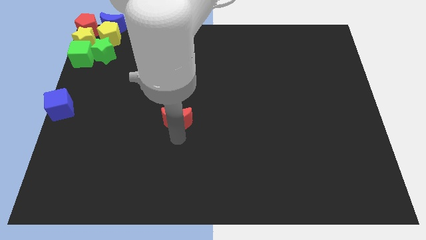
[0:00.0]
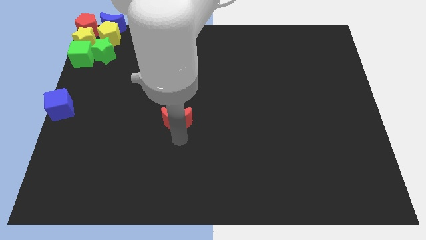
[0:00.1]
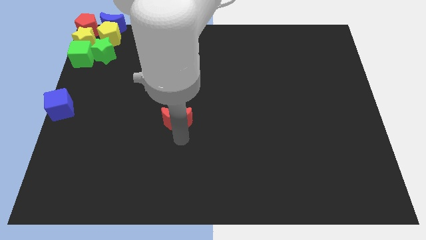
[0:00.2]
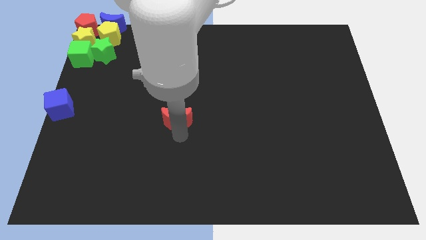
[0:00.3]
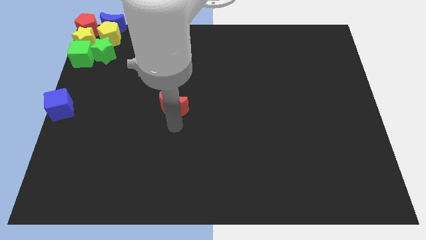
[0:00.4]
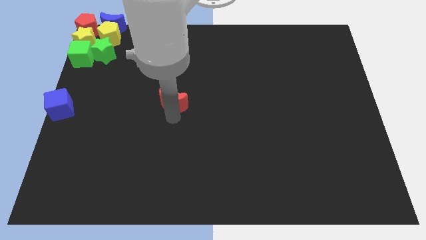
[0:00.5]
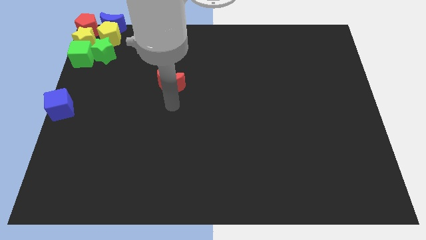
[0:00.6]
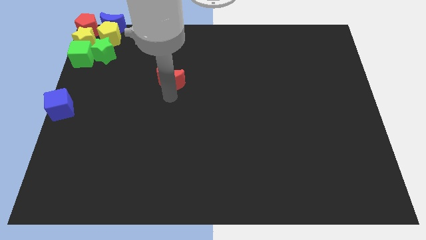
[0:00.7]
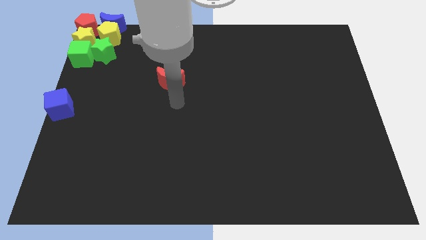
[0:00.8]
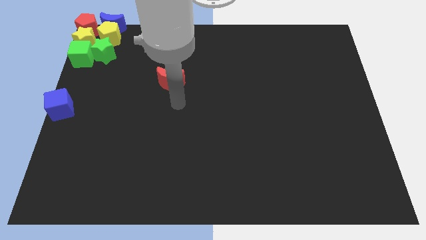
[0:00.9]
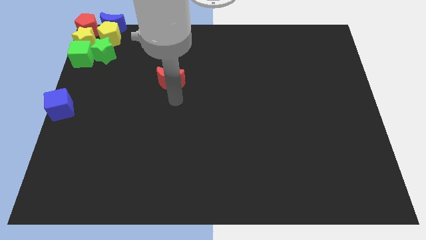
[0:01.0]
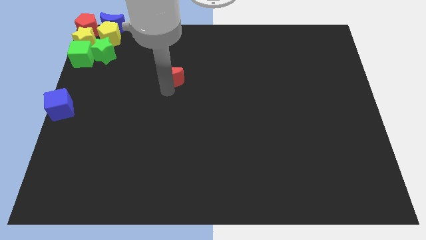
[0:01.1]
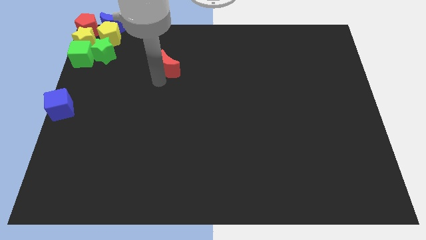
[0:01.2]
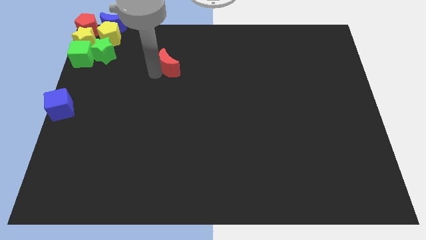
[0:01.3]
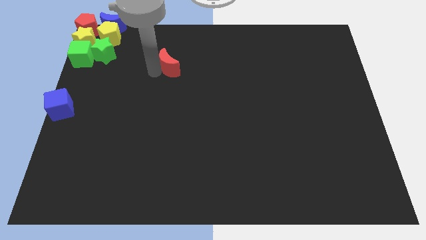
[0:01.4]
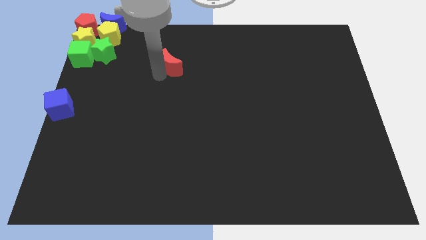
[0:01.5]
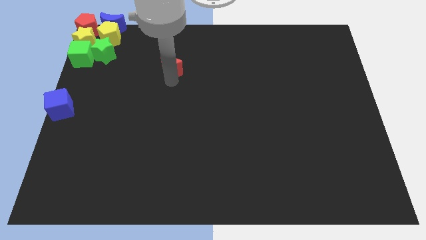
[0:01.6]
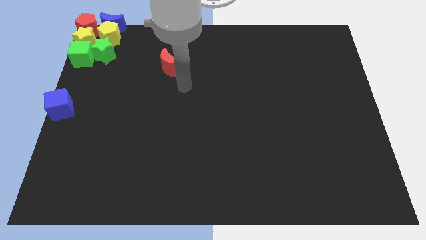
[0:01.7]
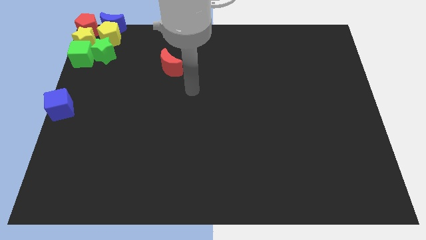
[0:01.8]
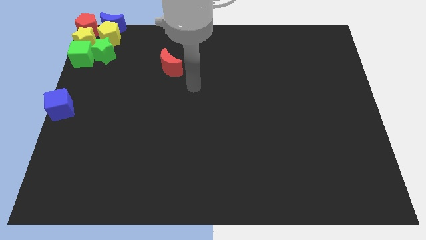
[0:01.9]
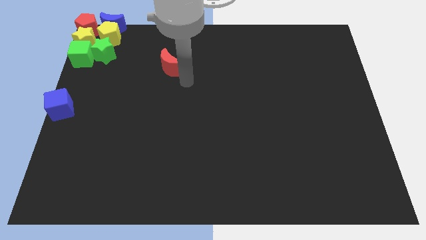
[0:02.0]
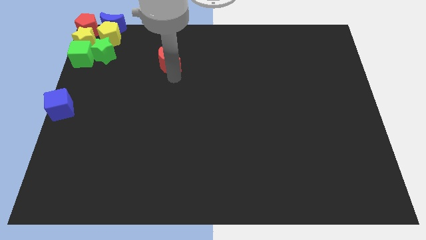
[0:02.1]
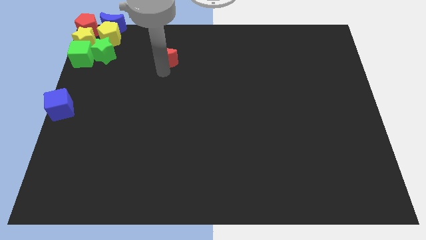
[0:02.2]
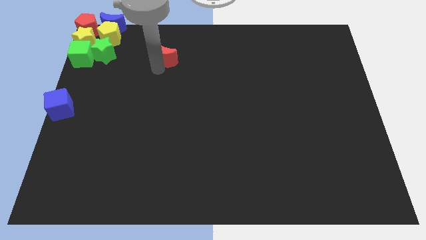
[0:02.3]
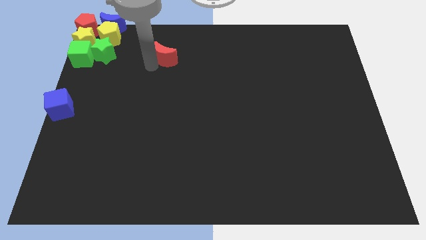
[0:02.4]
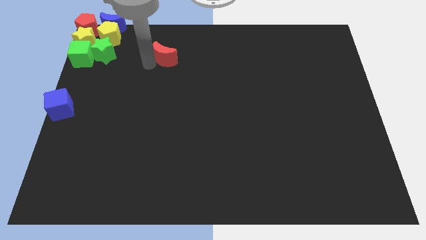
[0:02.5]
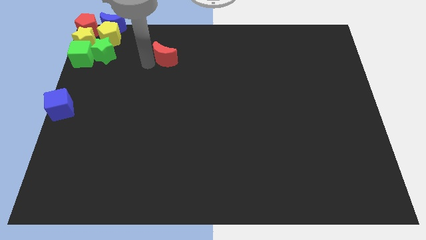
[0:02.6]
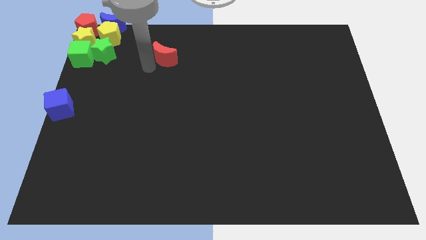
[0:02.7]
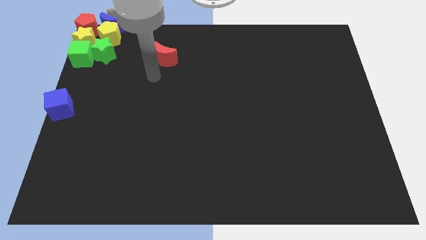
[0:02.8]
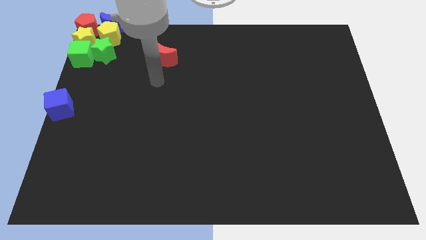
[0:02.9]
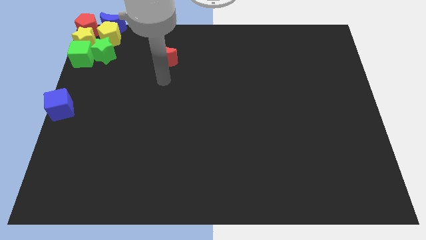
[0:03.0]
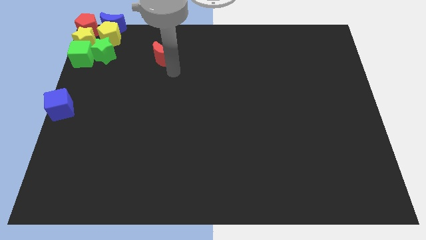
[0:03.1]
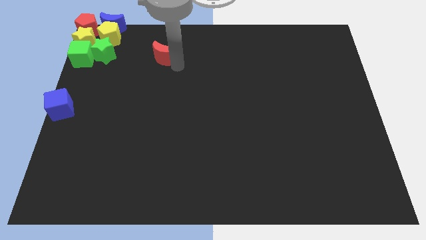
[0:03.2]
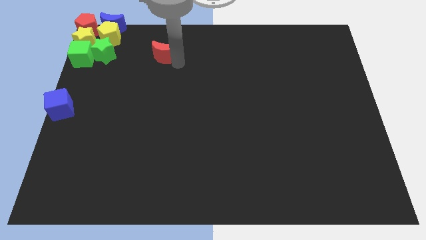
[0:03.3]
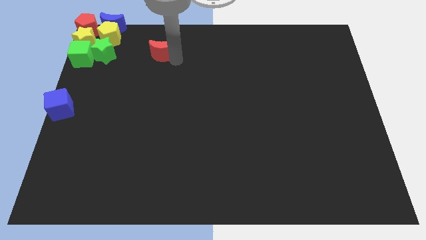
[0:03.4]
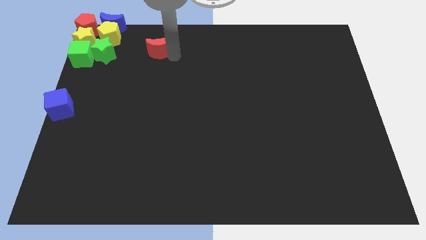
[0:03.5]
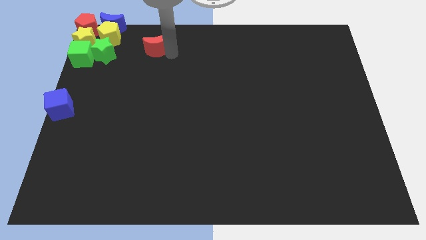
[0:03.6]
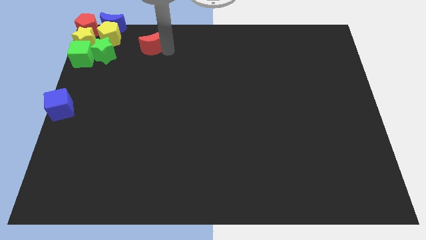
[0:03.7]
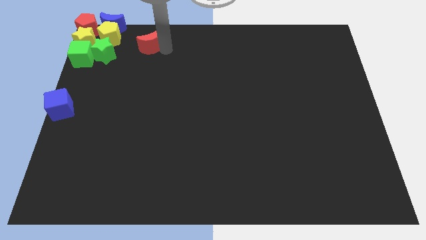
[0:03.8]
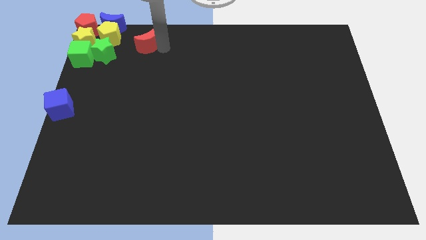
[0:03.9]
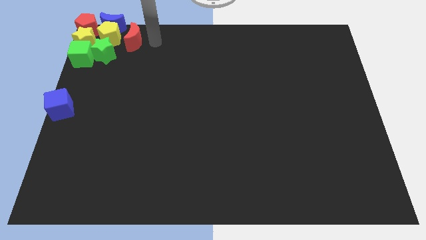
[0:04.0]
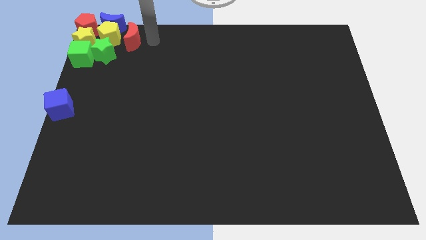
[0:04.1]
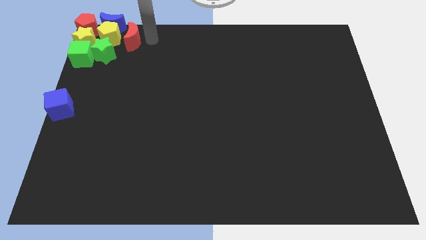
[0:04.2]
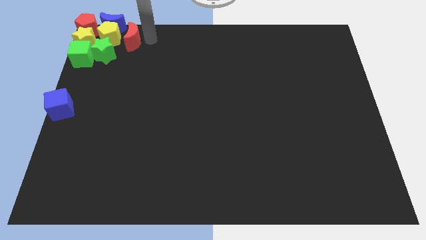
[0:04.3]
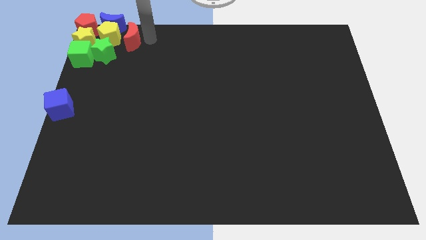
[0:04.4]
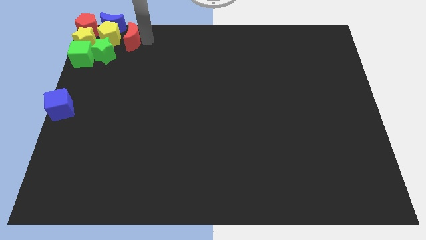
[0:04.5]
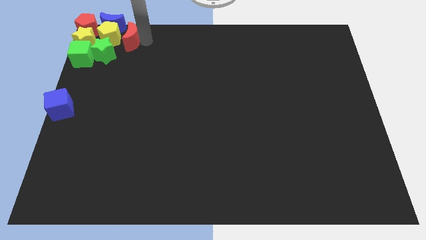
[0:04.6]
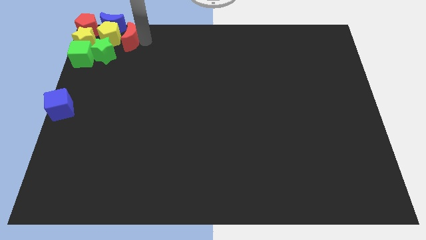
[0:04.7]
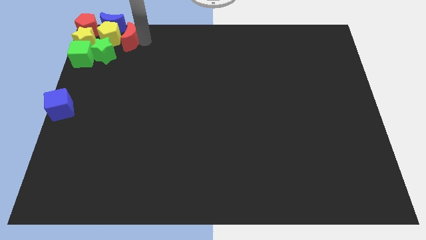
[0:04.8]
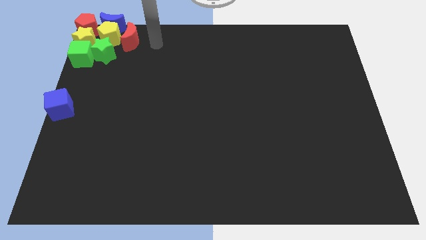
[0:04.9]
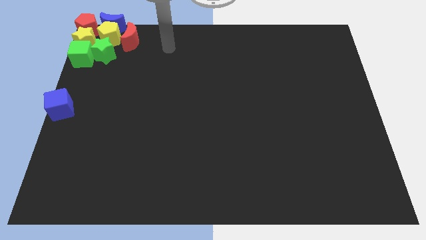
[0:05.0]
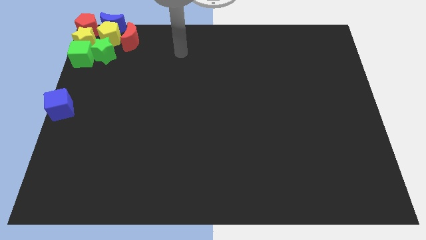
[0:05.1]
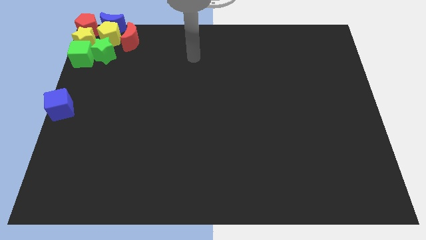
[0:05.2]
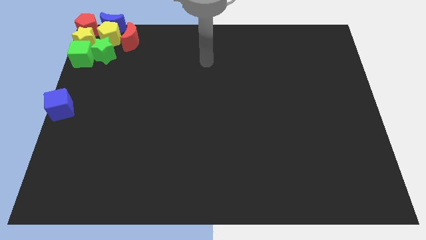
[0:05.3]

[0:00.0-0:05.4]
move the red moon towards a group of blocks

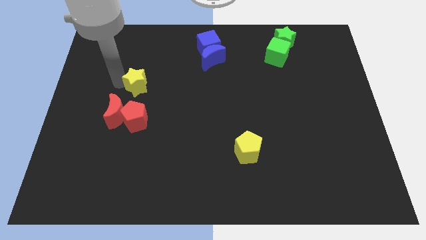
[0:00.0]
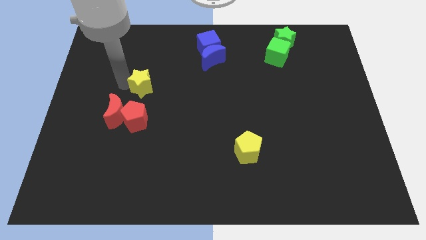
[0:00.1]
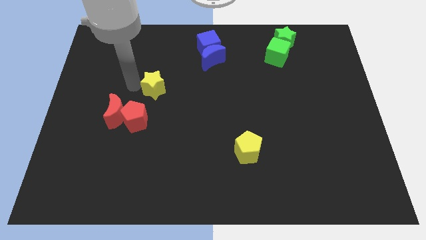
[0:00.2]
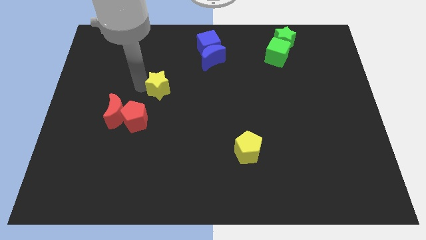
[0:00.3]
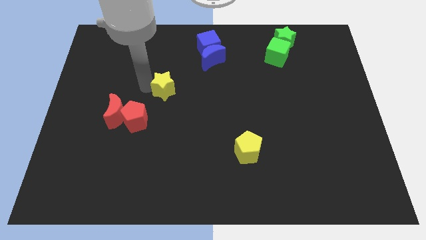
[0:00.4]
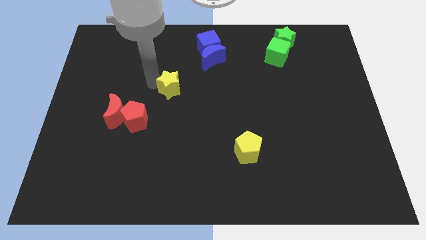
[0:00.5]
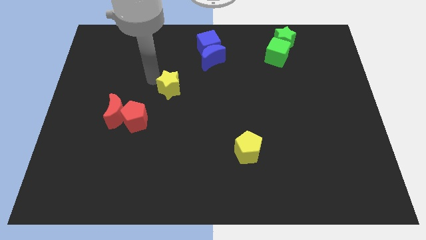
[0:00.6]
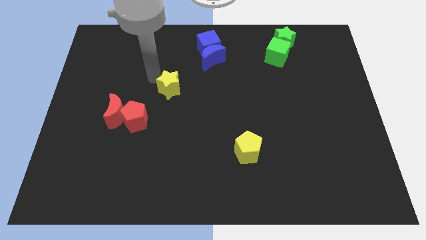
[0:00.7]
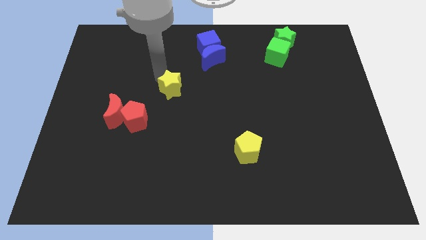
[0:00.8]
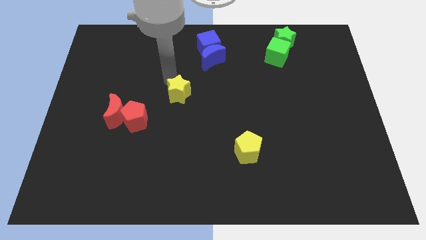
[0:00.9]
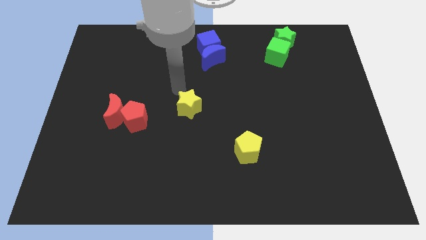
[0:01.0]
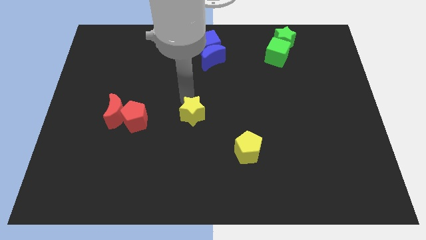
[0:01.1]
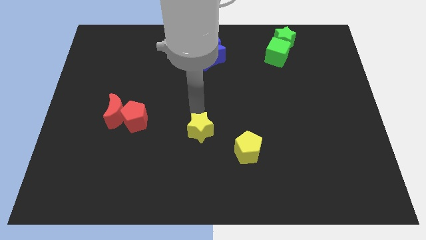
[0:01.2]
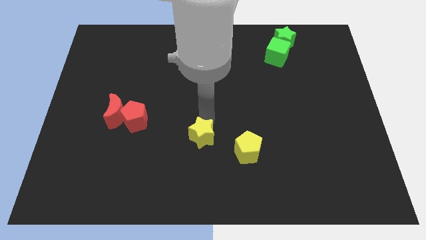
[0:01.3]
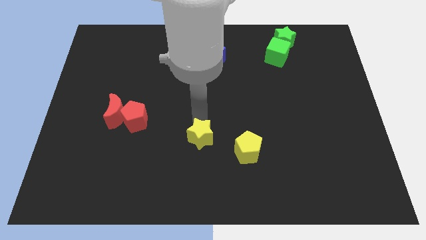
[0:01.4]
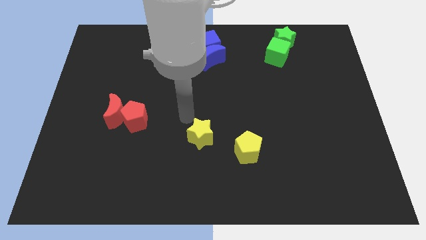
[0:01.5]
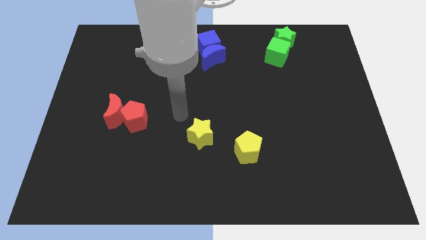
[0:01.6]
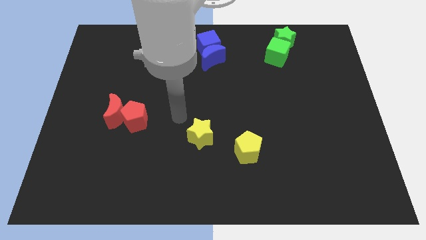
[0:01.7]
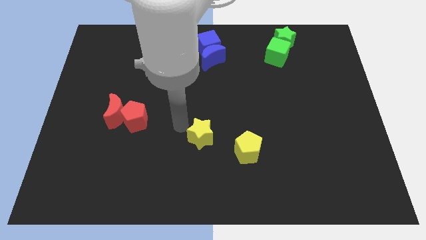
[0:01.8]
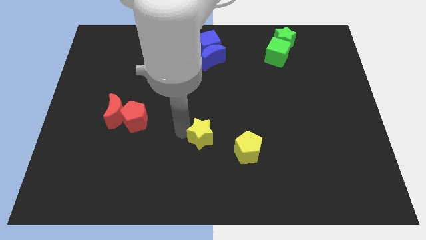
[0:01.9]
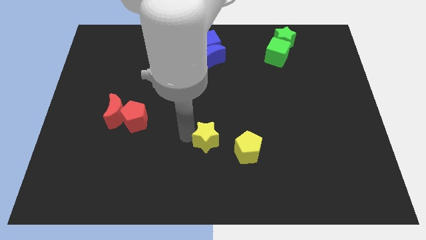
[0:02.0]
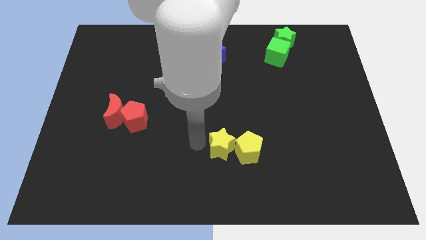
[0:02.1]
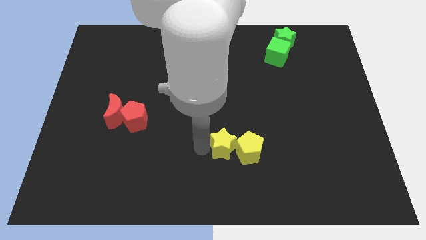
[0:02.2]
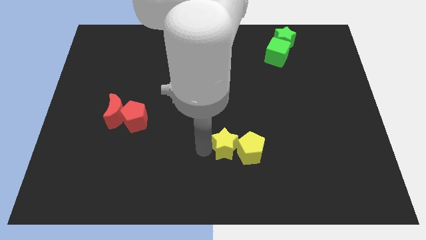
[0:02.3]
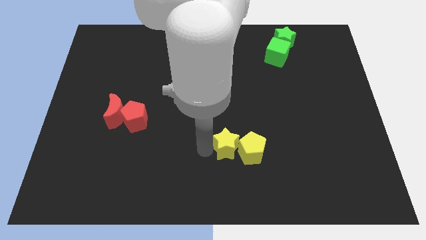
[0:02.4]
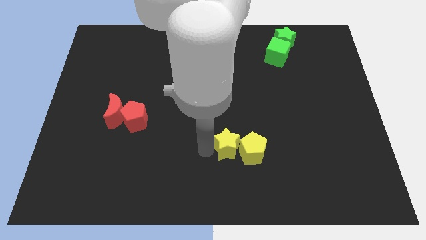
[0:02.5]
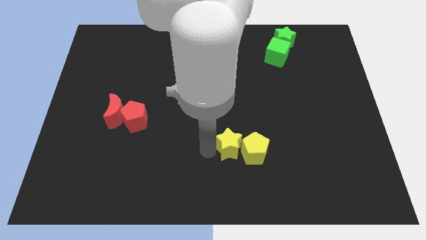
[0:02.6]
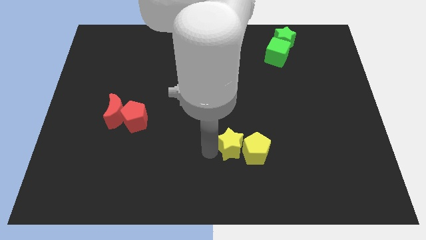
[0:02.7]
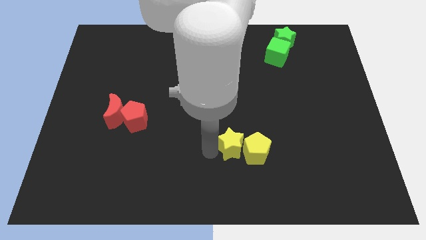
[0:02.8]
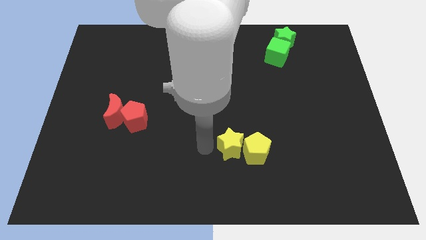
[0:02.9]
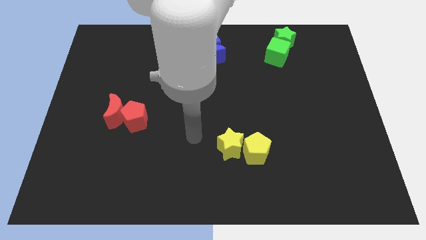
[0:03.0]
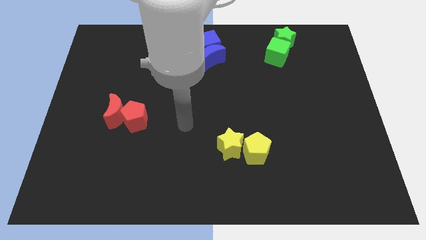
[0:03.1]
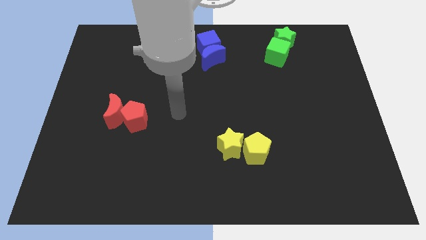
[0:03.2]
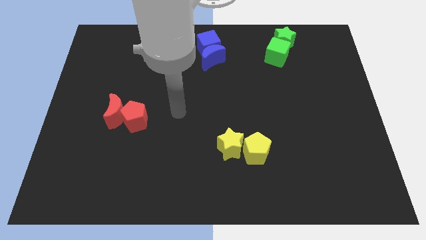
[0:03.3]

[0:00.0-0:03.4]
push the yellow star into the yellow pentagon
